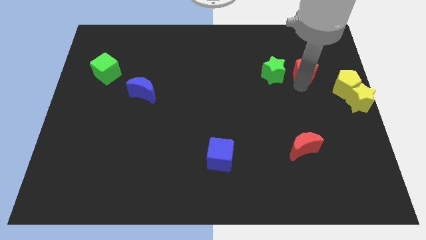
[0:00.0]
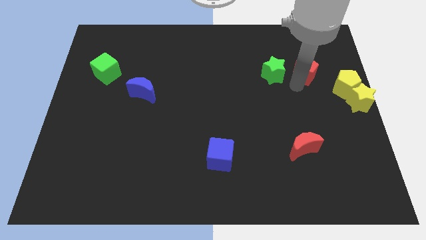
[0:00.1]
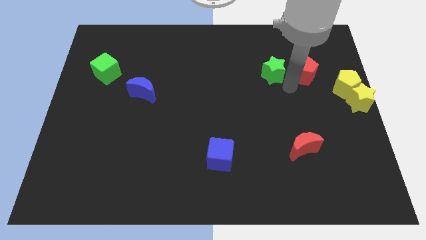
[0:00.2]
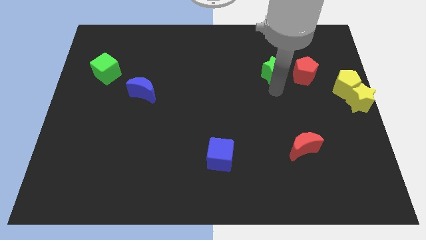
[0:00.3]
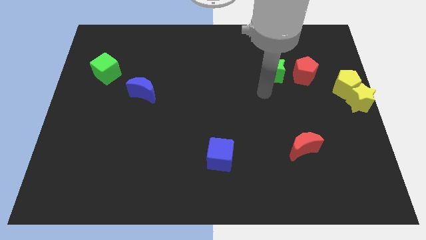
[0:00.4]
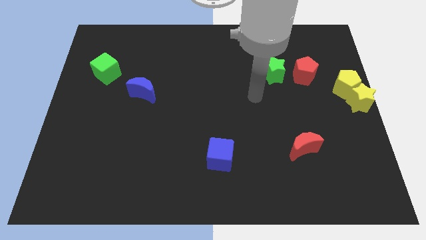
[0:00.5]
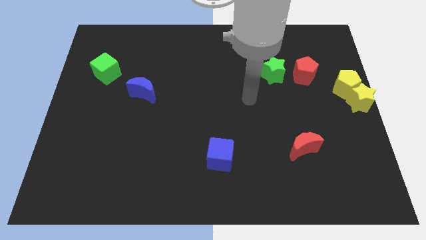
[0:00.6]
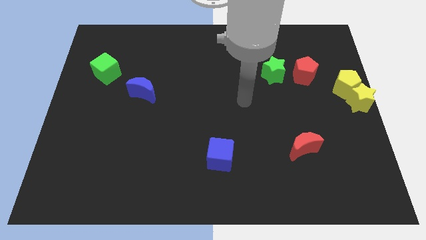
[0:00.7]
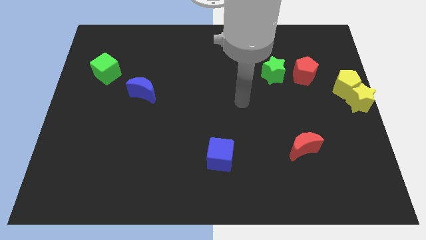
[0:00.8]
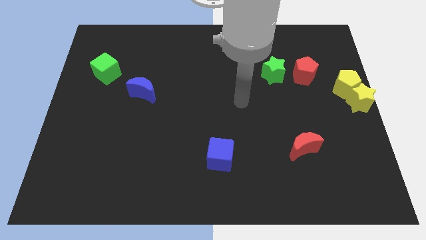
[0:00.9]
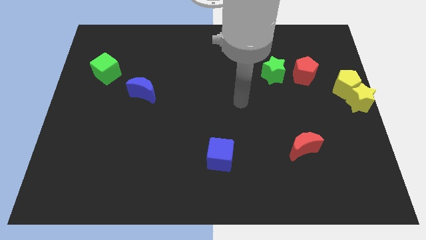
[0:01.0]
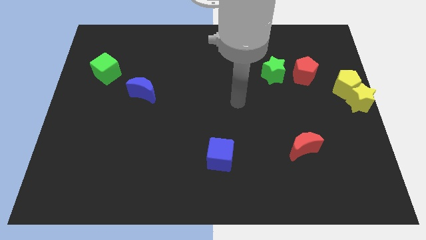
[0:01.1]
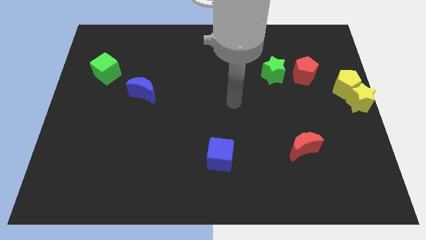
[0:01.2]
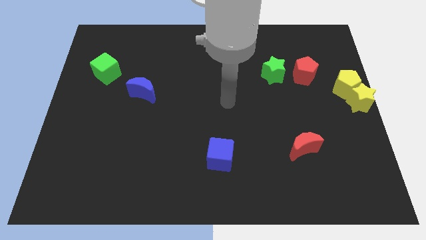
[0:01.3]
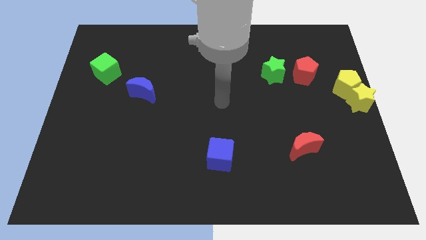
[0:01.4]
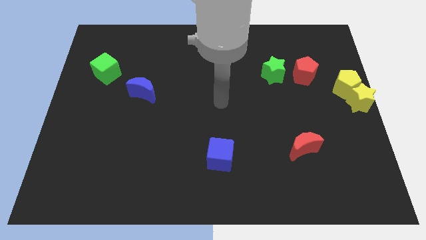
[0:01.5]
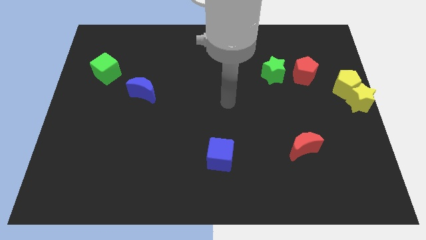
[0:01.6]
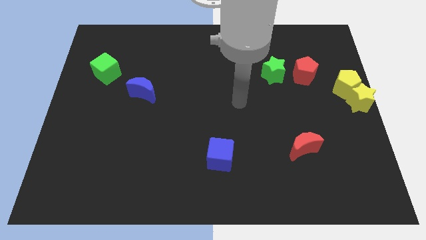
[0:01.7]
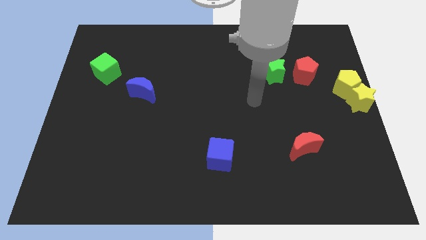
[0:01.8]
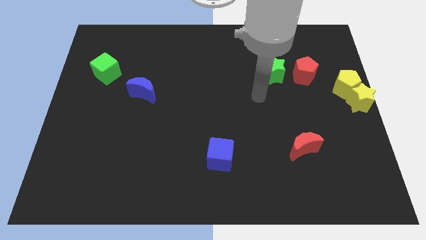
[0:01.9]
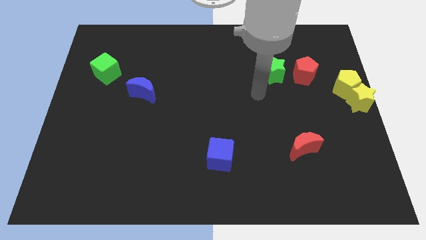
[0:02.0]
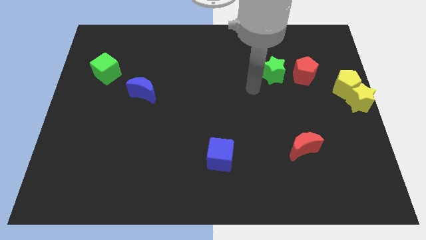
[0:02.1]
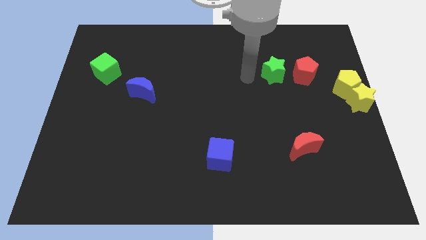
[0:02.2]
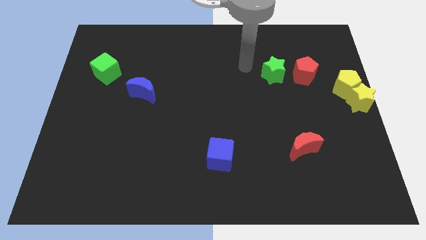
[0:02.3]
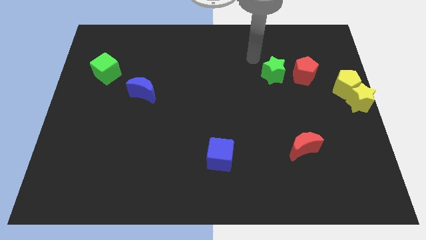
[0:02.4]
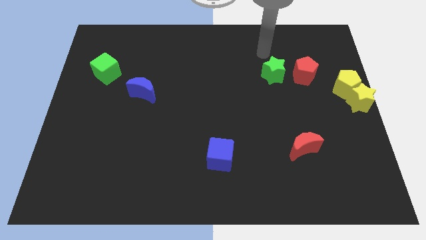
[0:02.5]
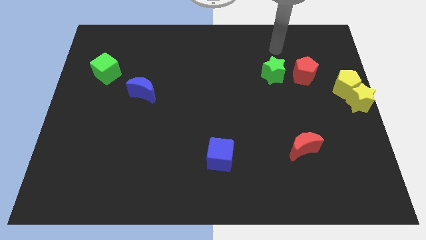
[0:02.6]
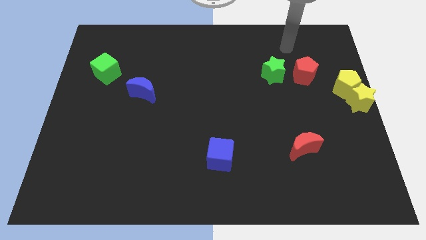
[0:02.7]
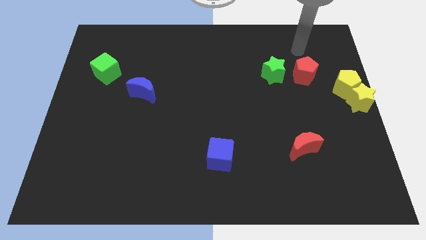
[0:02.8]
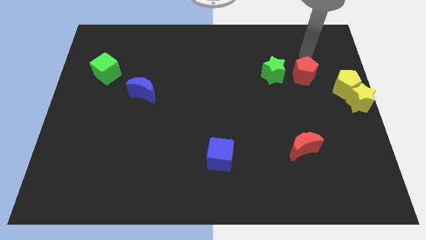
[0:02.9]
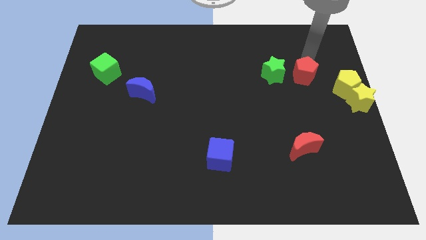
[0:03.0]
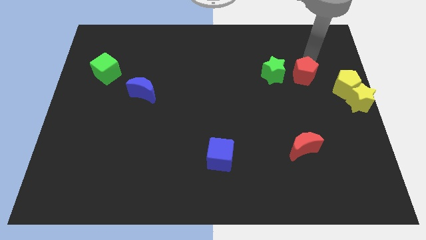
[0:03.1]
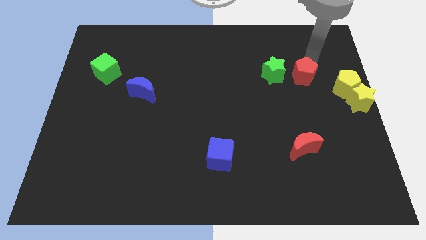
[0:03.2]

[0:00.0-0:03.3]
put your arm above the red pentagon

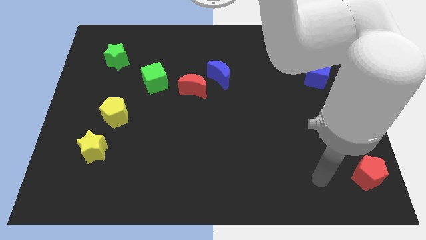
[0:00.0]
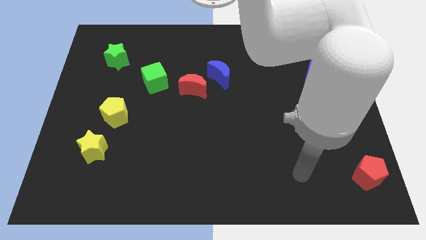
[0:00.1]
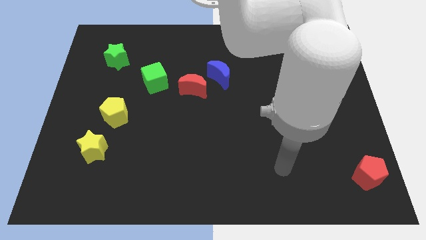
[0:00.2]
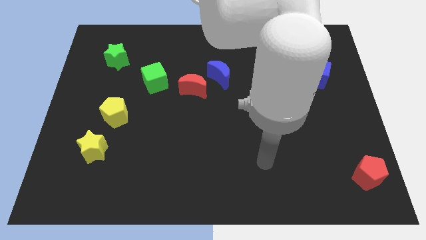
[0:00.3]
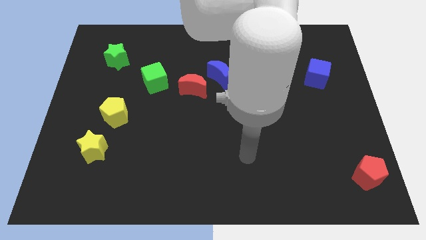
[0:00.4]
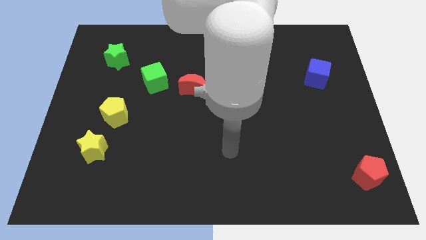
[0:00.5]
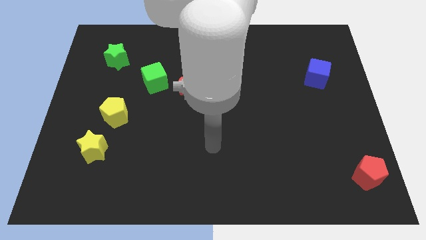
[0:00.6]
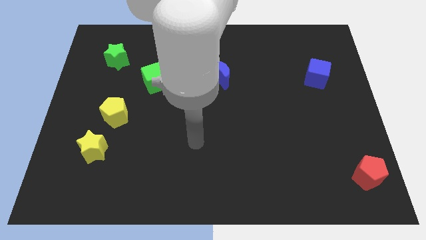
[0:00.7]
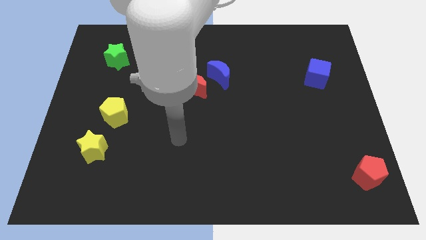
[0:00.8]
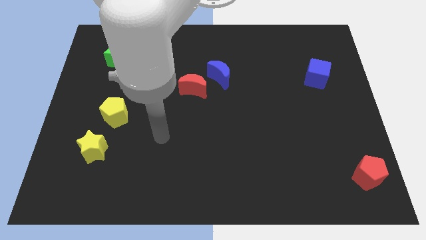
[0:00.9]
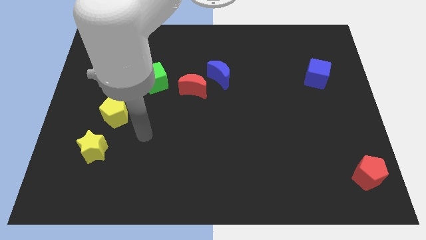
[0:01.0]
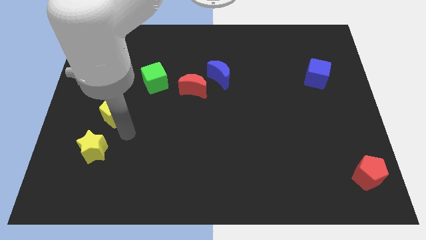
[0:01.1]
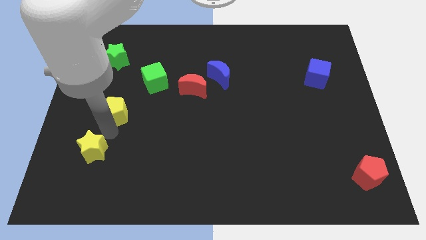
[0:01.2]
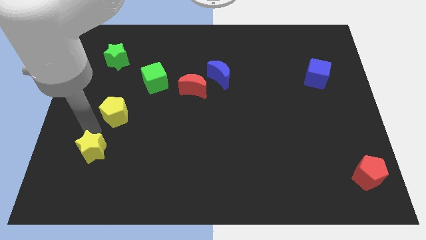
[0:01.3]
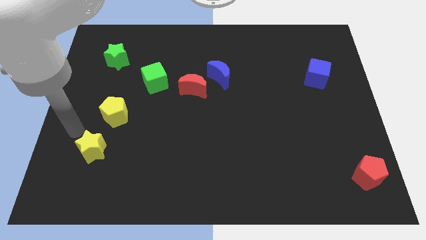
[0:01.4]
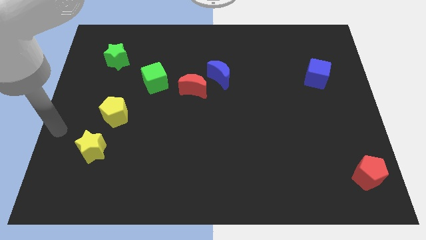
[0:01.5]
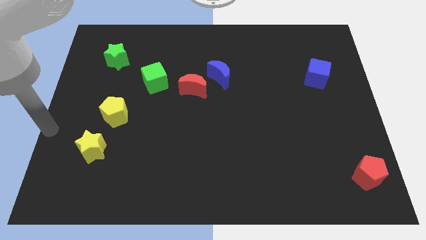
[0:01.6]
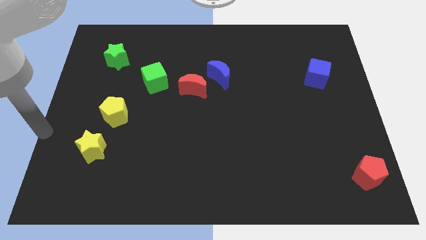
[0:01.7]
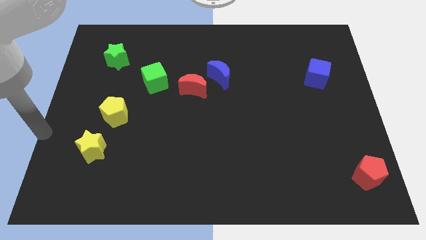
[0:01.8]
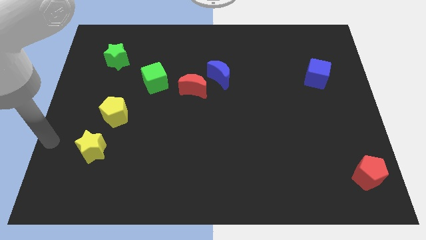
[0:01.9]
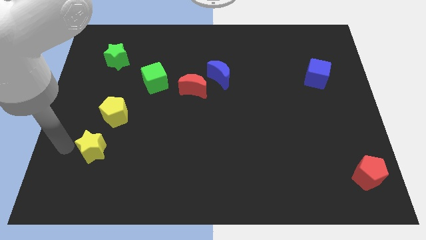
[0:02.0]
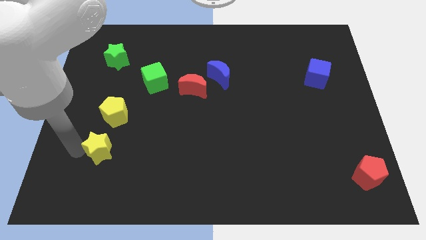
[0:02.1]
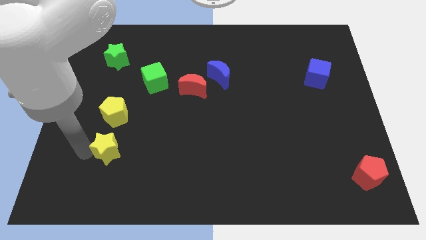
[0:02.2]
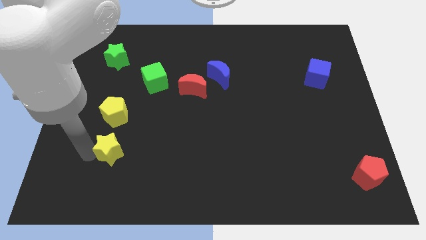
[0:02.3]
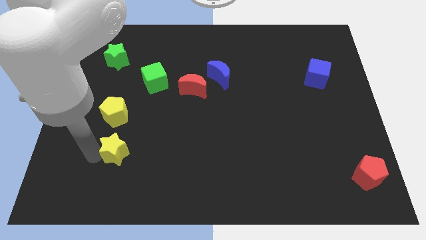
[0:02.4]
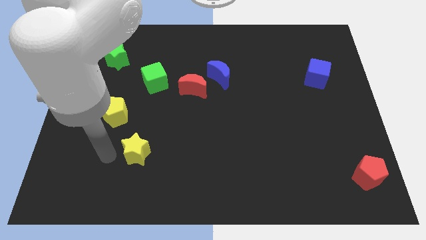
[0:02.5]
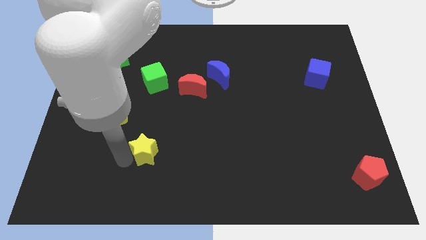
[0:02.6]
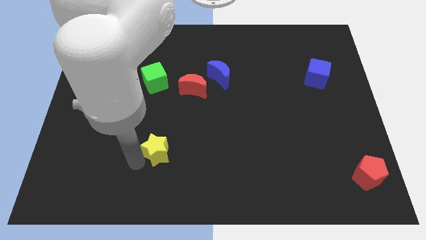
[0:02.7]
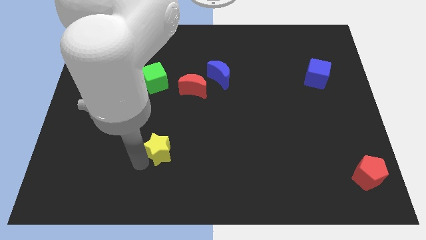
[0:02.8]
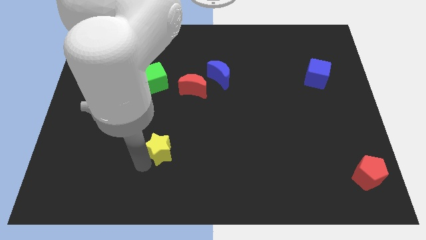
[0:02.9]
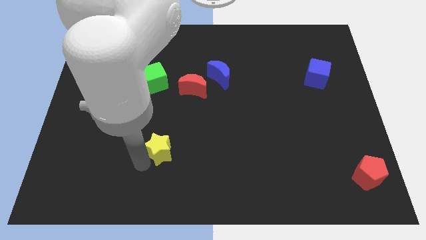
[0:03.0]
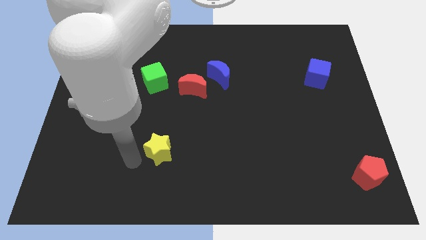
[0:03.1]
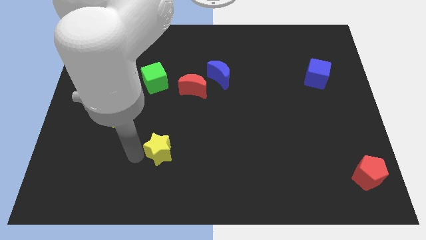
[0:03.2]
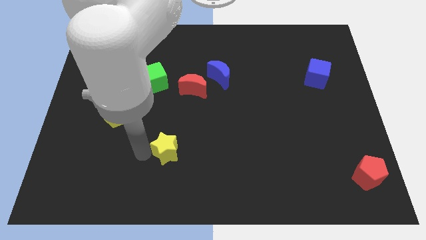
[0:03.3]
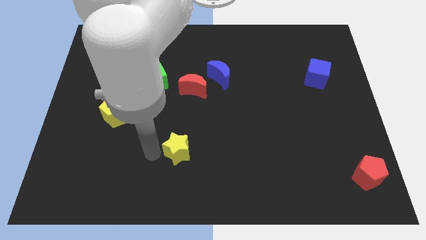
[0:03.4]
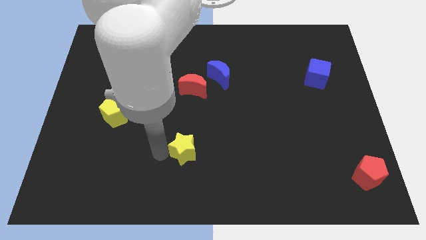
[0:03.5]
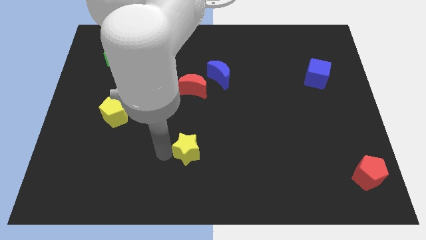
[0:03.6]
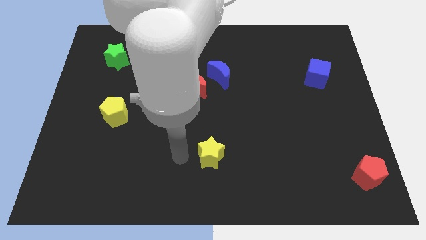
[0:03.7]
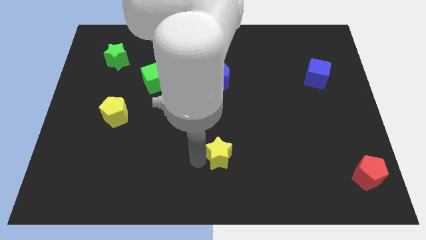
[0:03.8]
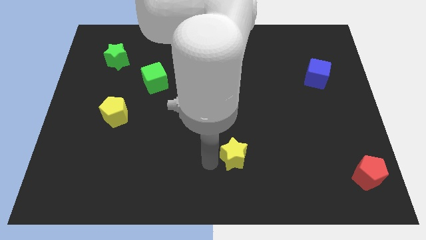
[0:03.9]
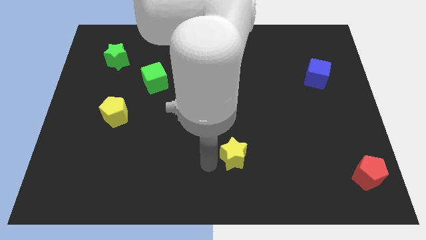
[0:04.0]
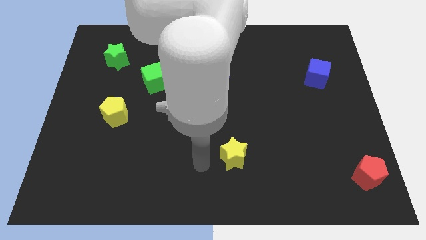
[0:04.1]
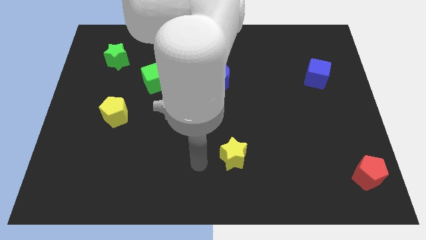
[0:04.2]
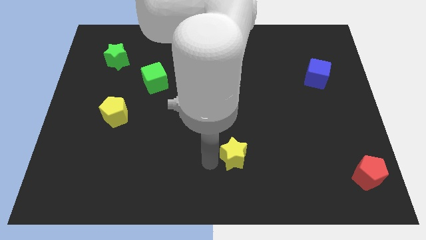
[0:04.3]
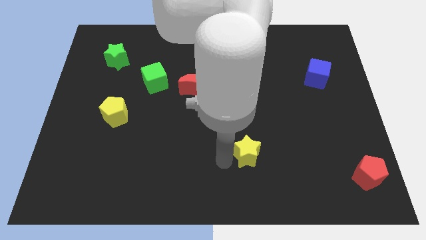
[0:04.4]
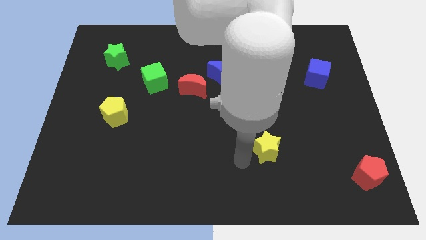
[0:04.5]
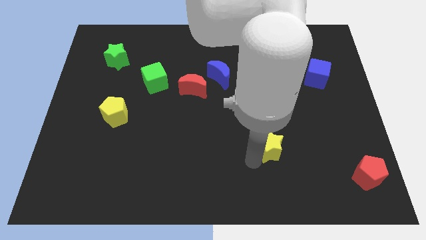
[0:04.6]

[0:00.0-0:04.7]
move the yellow star to the right side of the board

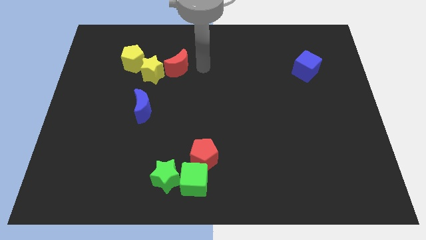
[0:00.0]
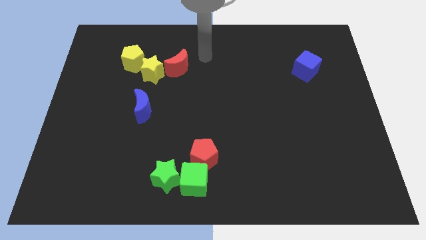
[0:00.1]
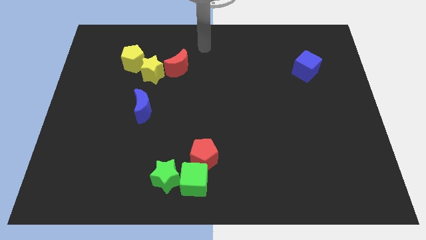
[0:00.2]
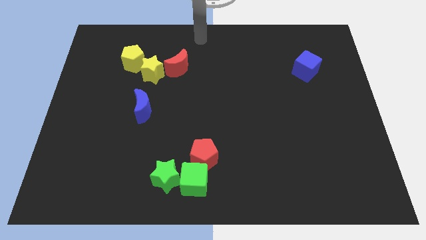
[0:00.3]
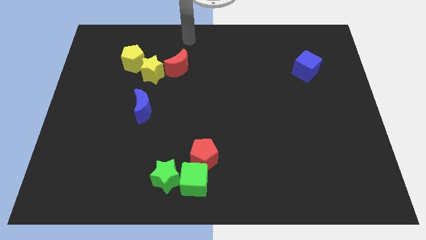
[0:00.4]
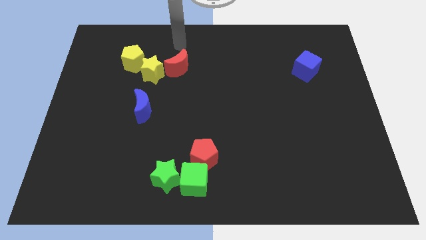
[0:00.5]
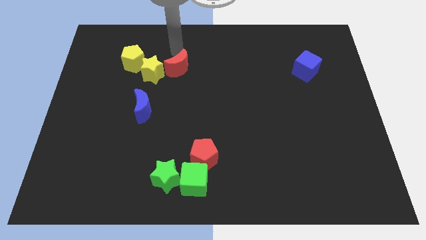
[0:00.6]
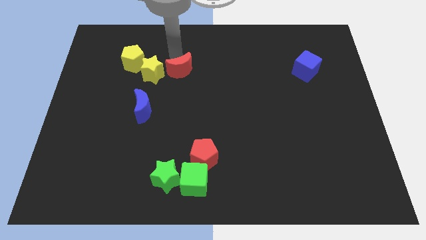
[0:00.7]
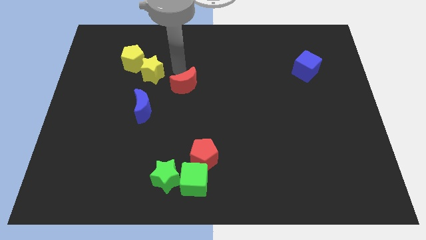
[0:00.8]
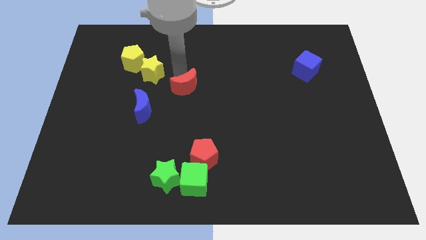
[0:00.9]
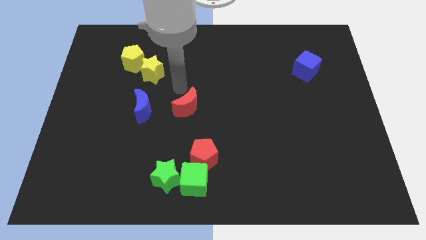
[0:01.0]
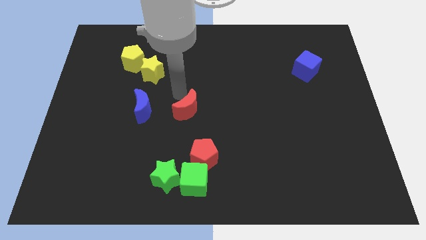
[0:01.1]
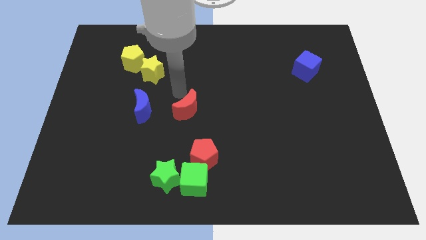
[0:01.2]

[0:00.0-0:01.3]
put the red moon right to the blue moon
